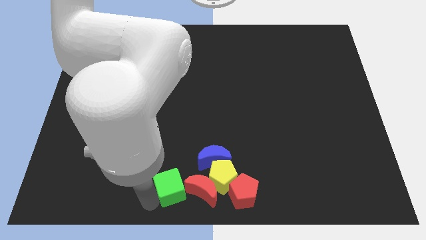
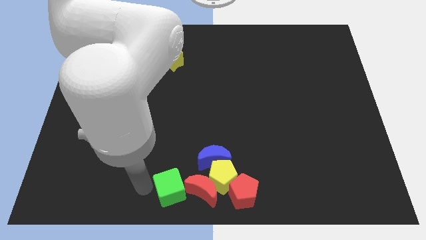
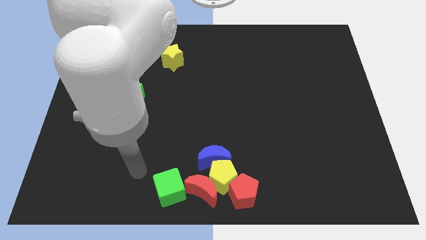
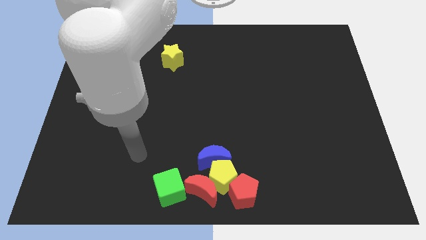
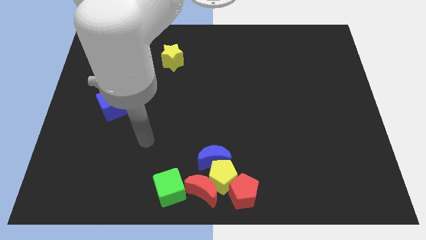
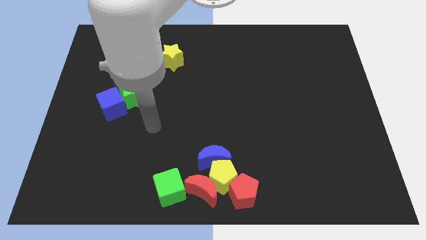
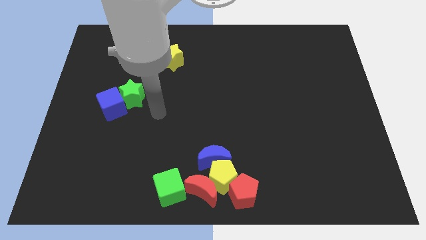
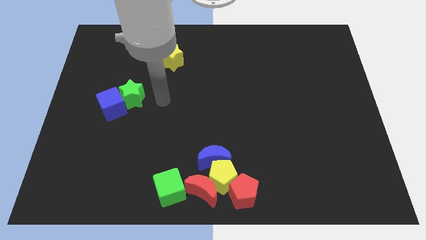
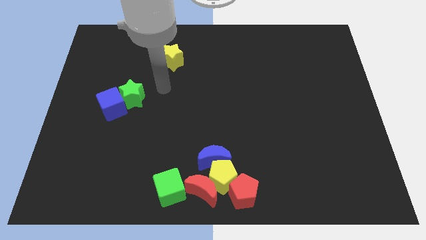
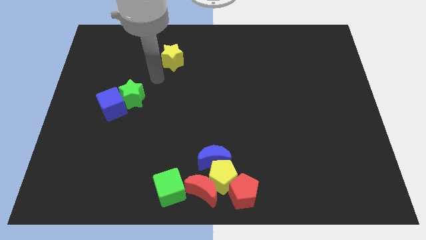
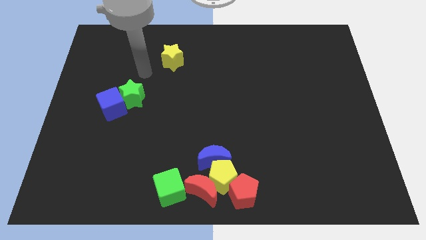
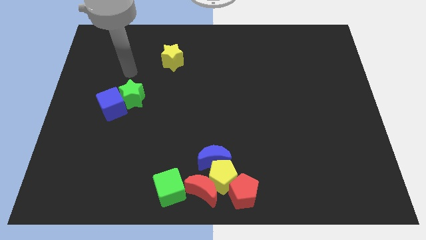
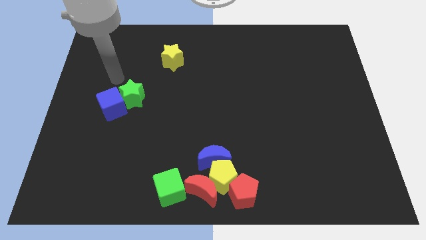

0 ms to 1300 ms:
move your arm to the top of the green star

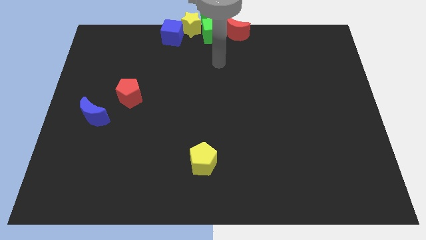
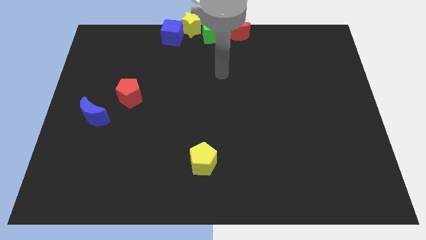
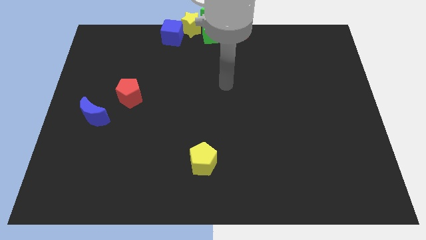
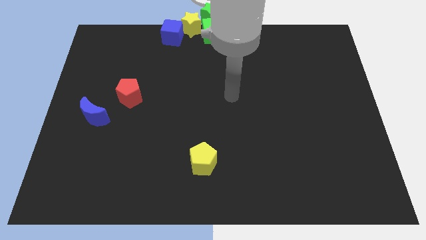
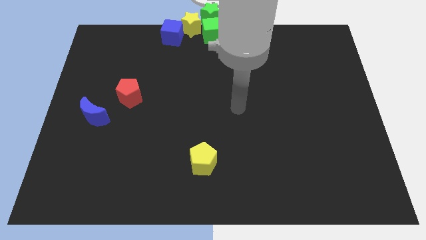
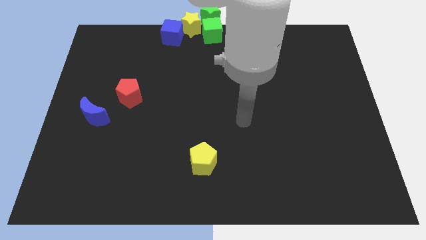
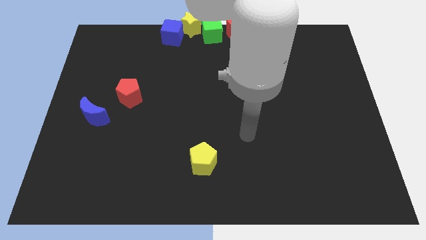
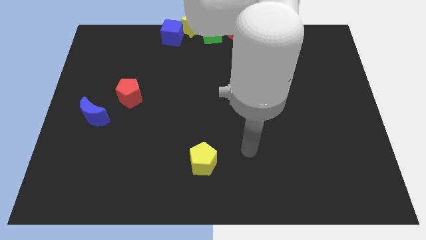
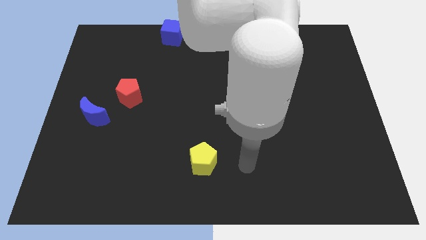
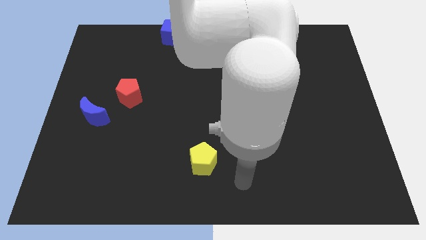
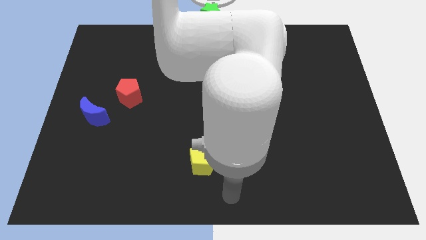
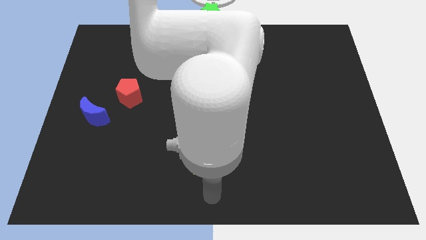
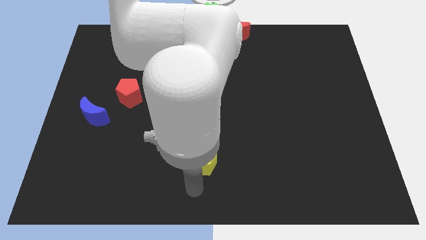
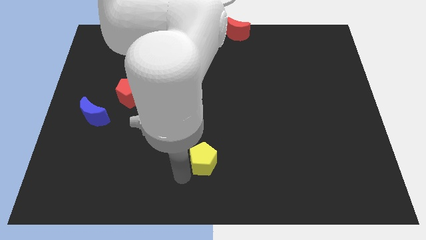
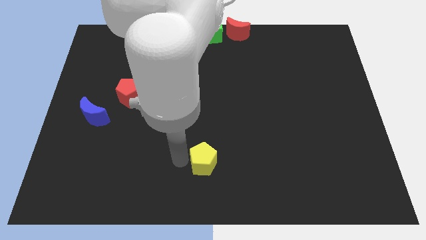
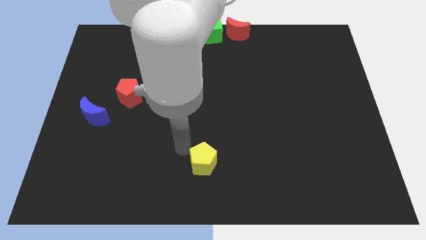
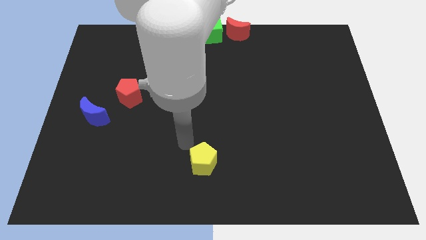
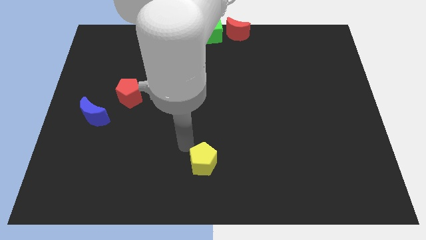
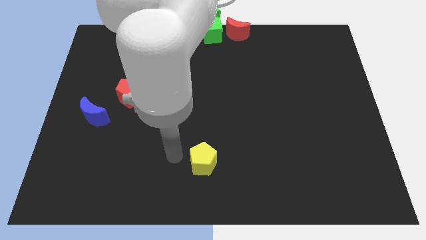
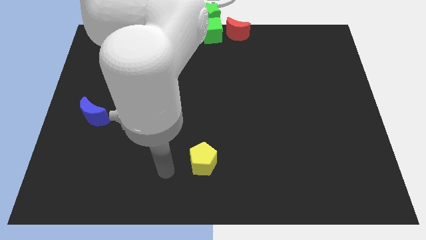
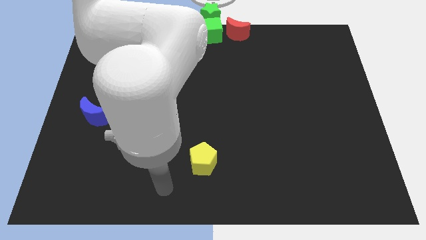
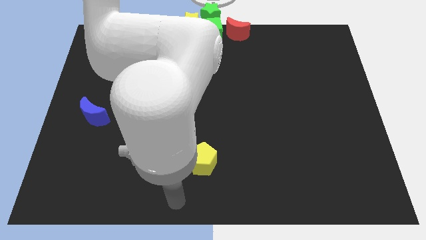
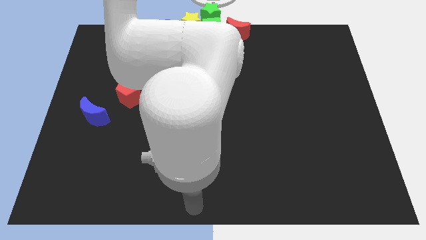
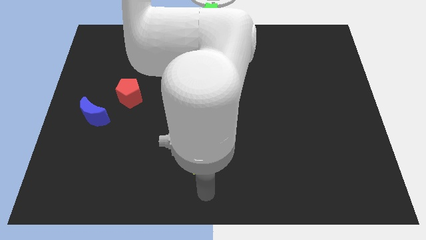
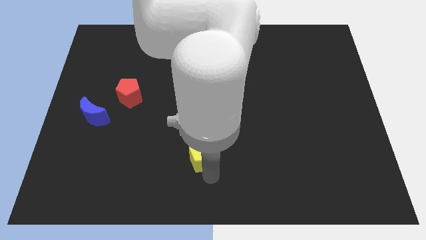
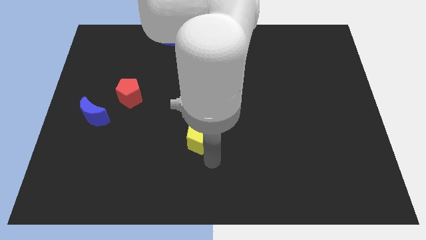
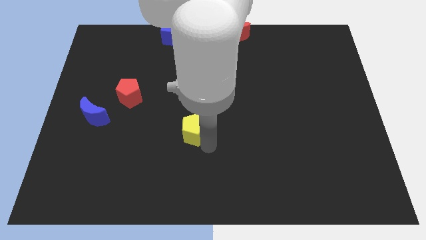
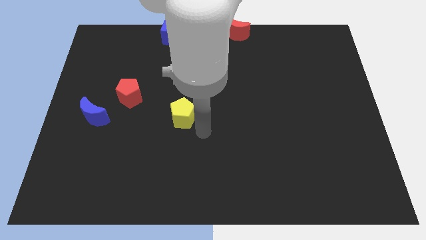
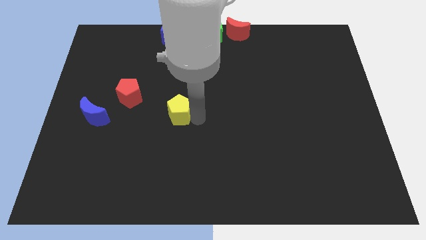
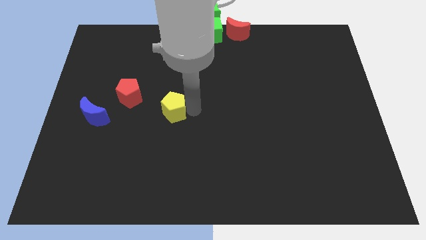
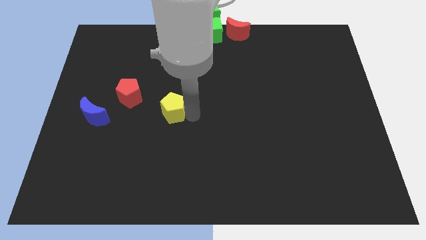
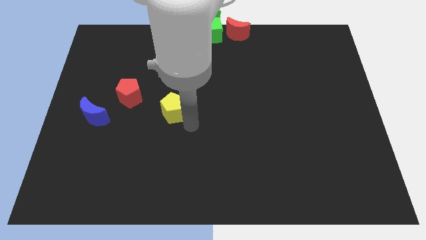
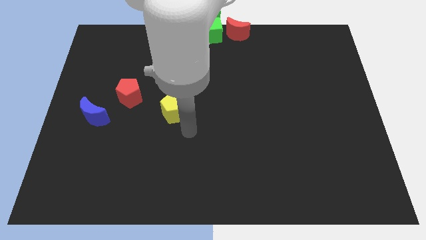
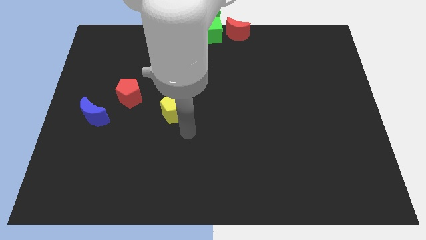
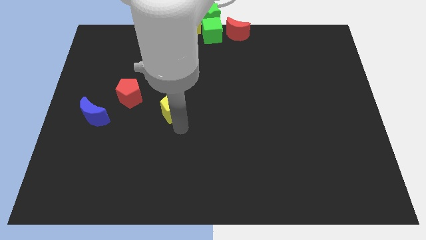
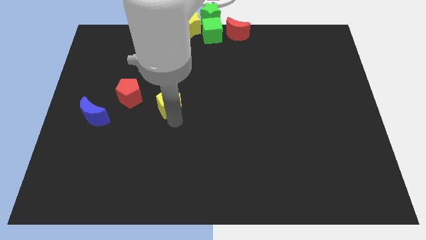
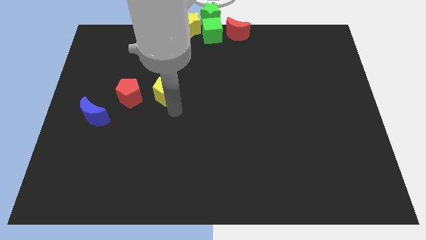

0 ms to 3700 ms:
drag the yellow pentagon to the right side of the red pentagon

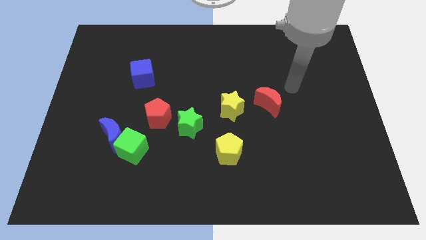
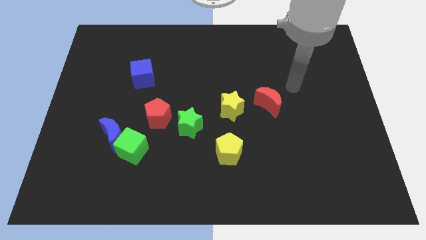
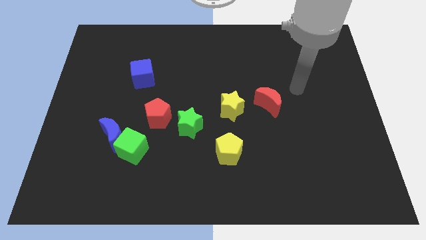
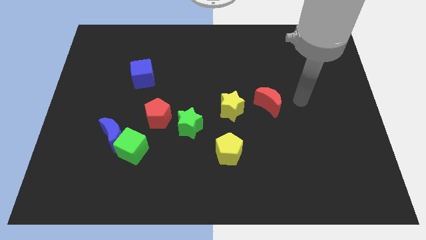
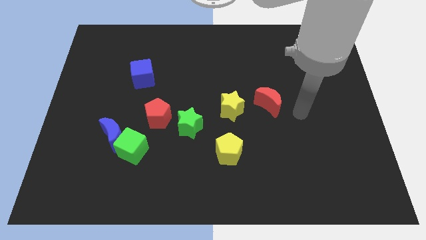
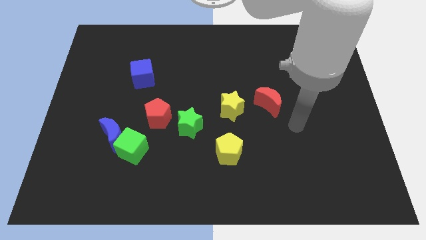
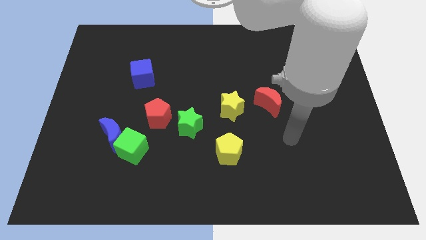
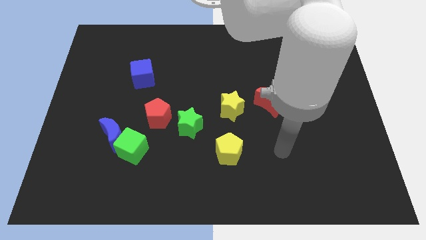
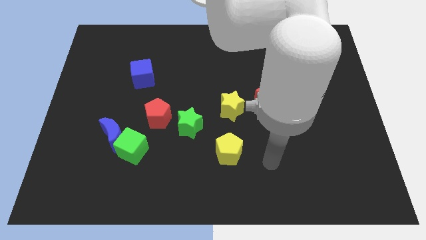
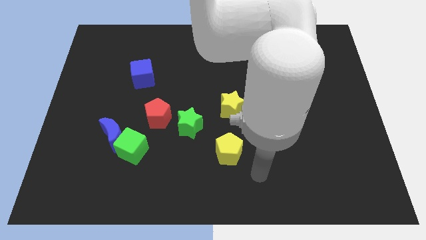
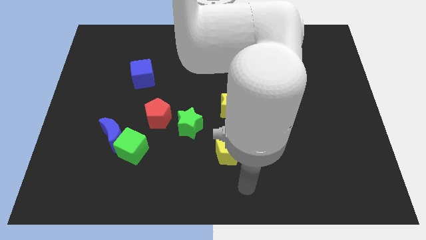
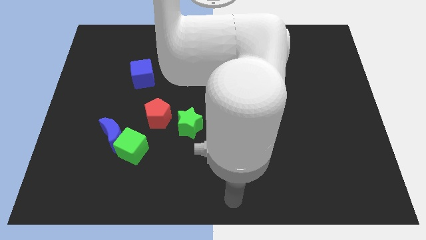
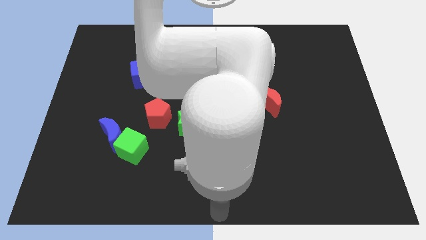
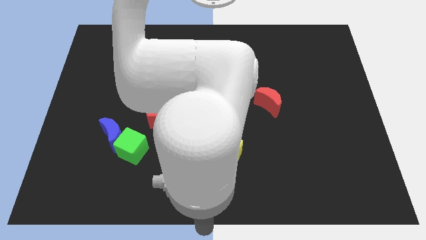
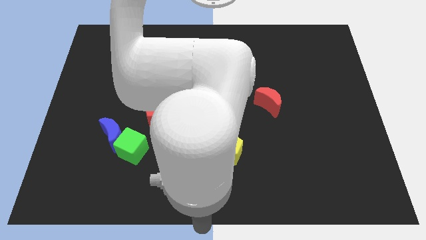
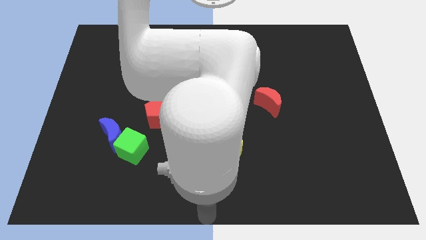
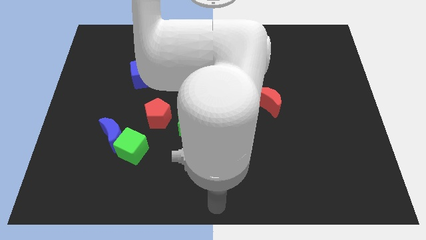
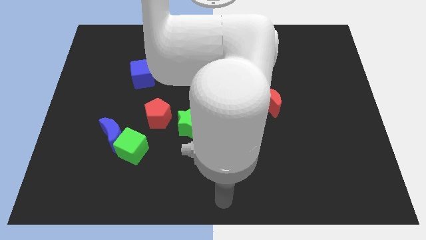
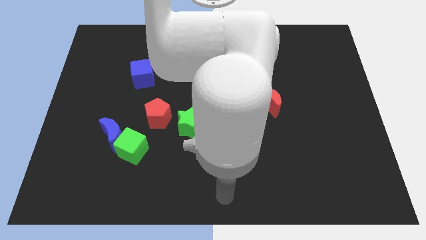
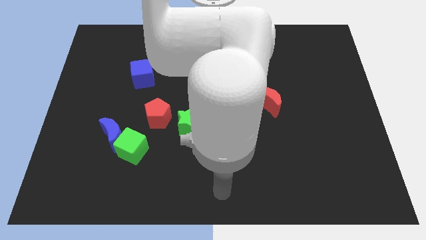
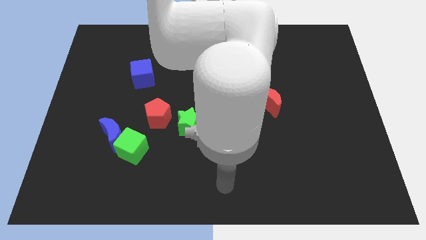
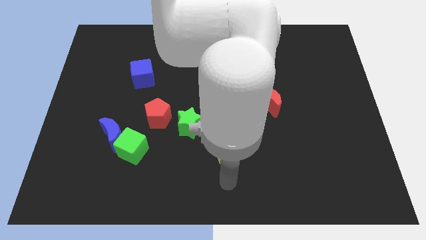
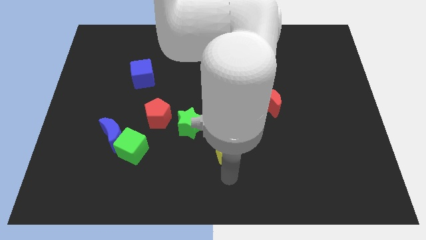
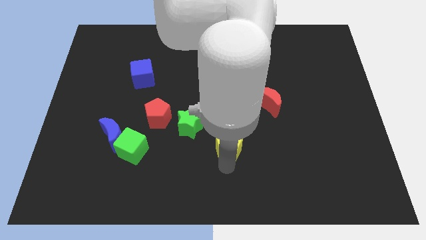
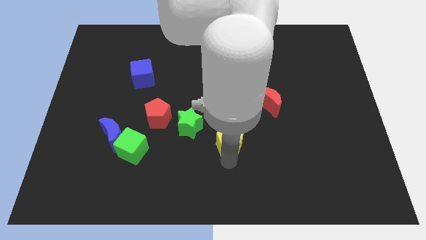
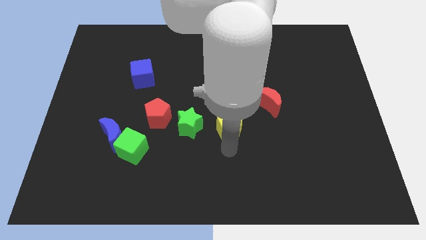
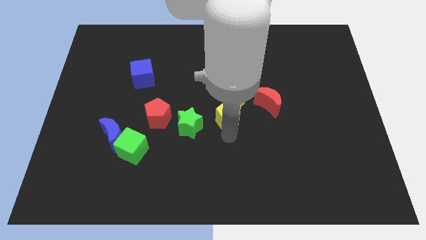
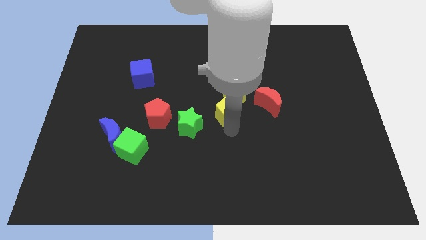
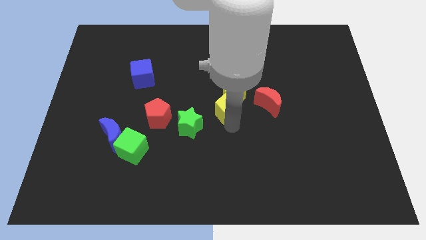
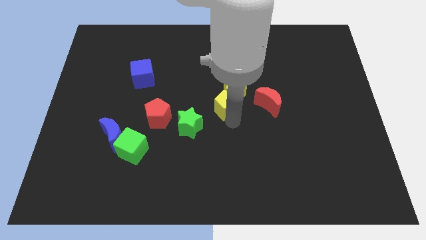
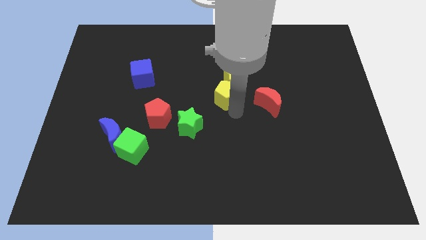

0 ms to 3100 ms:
group up the yellow blocks together at the center of the board

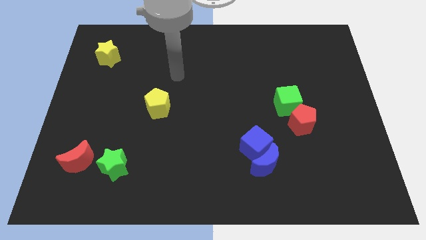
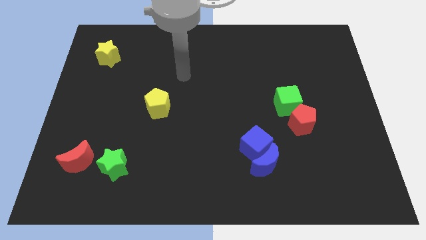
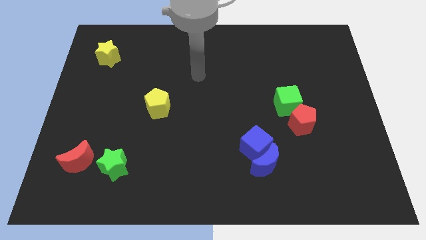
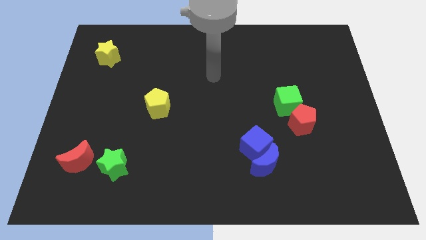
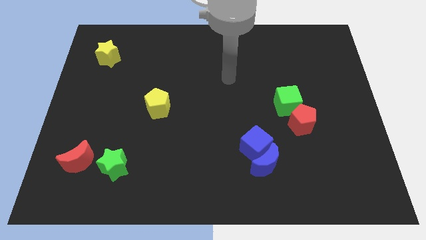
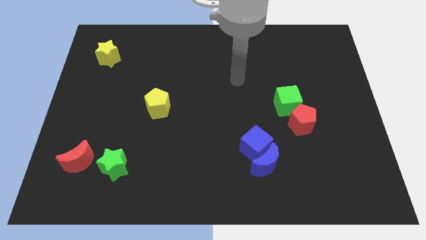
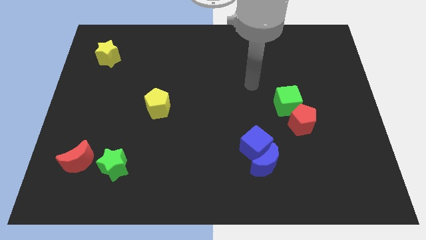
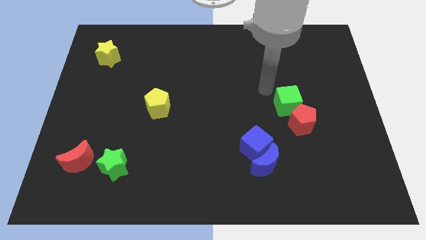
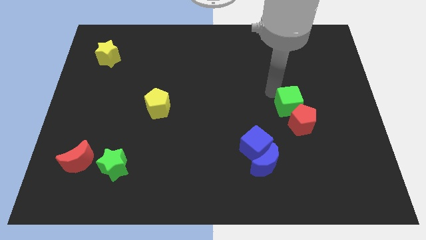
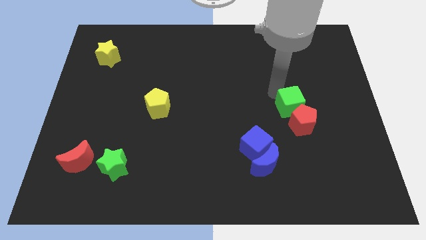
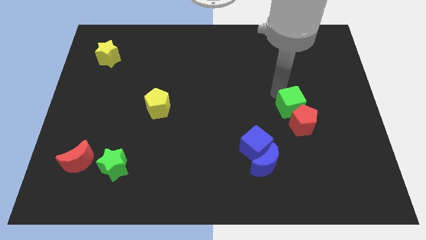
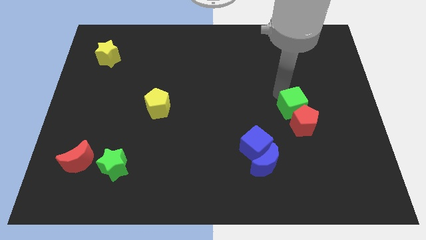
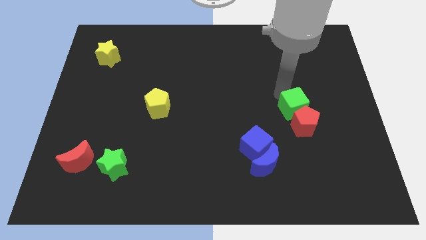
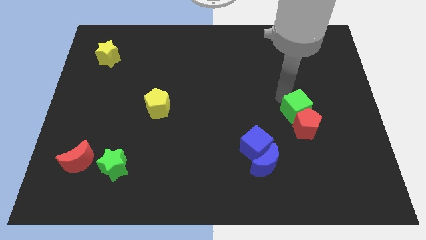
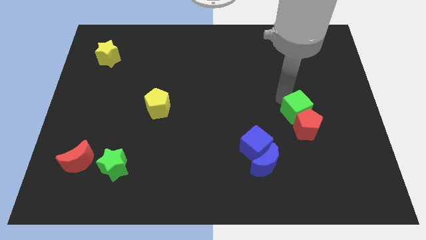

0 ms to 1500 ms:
slightly push both the green cube and red pentagon towards the bottom side
